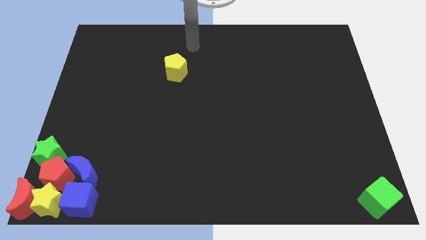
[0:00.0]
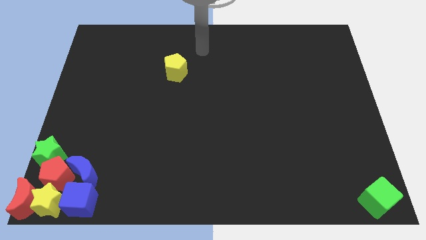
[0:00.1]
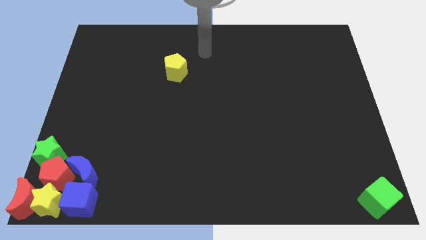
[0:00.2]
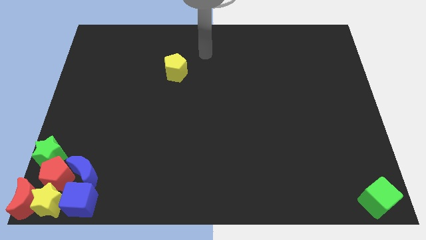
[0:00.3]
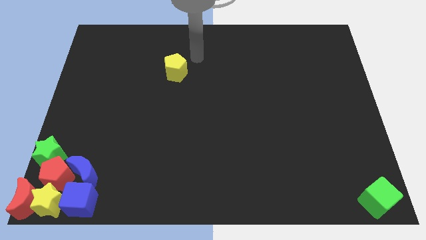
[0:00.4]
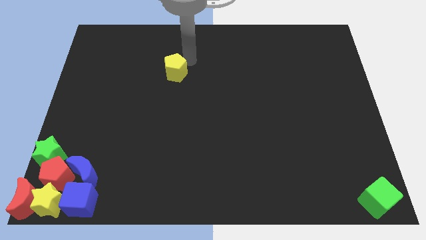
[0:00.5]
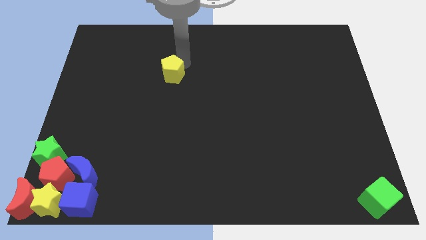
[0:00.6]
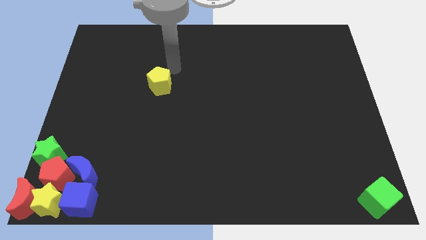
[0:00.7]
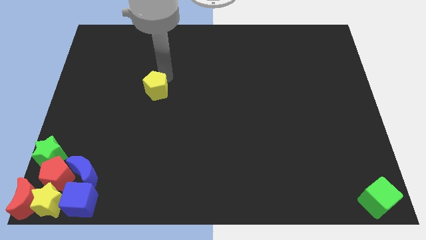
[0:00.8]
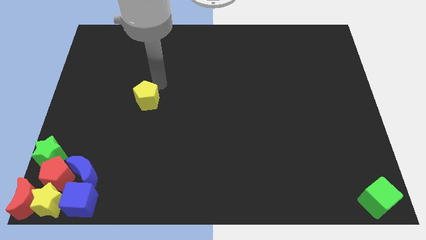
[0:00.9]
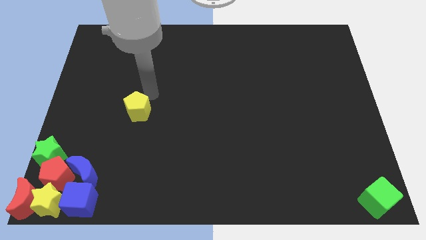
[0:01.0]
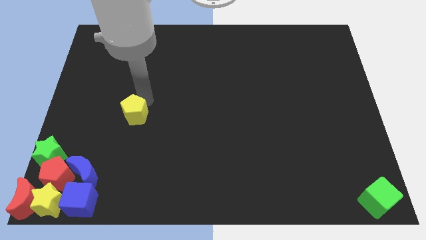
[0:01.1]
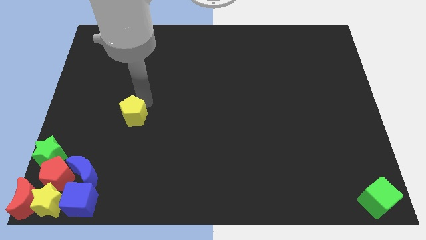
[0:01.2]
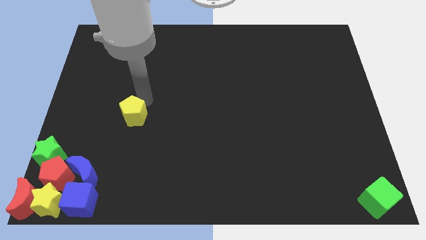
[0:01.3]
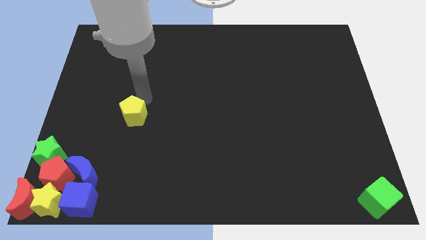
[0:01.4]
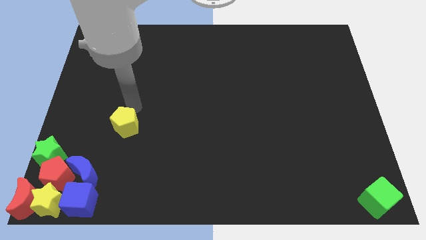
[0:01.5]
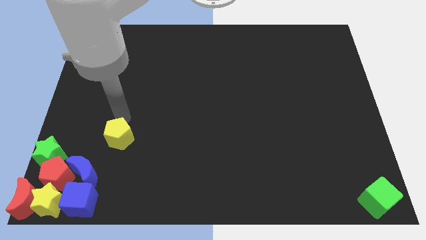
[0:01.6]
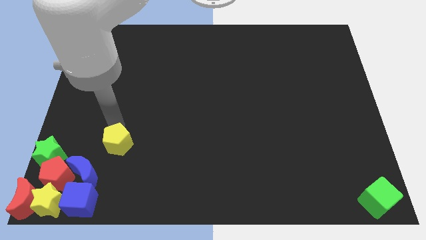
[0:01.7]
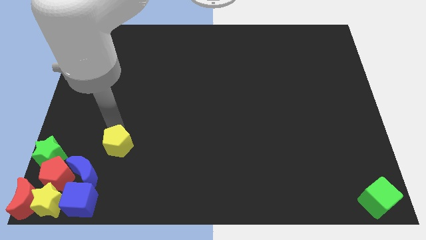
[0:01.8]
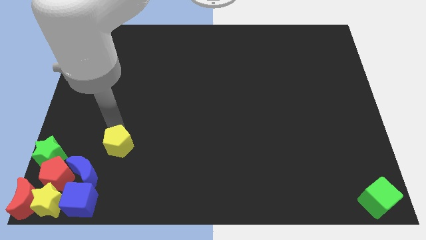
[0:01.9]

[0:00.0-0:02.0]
push the yellow pentagon towards the blue crescent

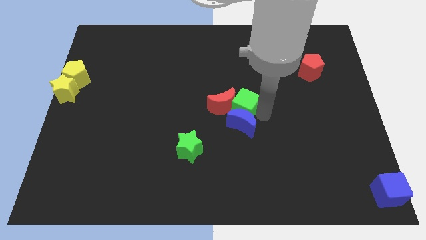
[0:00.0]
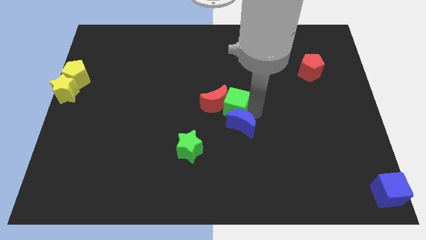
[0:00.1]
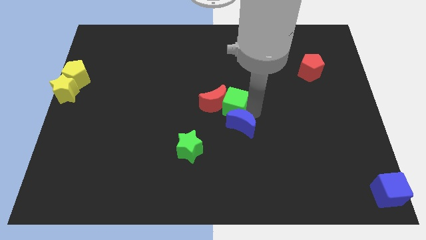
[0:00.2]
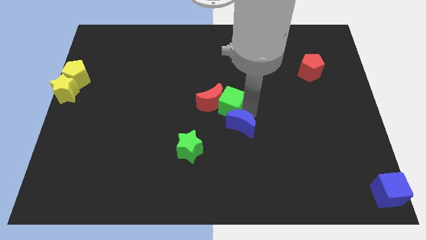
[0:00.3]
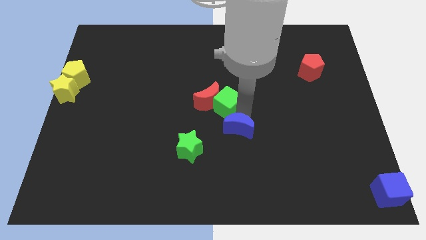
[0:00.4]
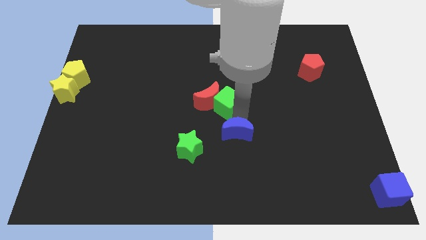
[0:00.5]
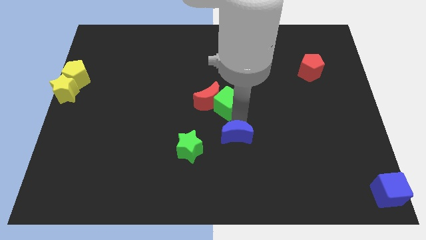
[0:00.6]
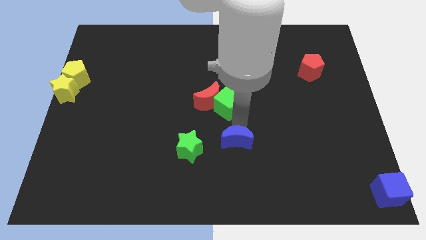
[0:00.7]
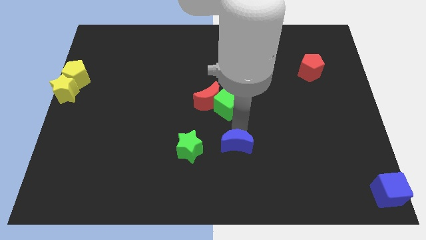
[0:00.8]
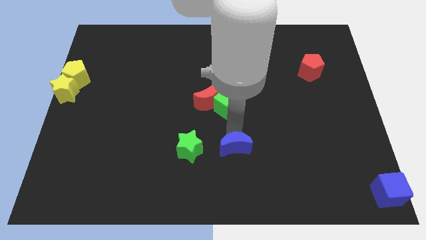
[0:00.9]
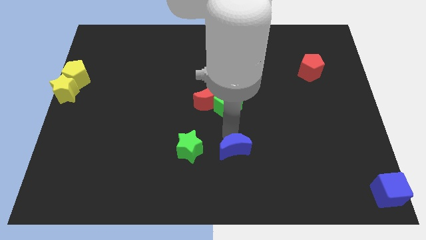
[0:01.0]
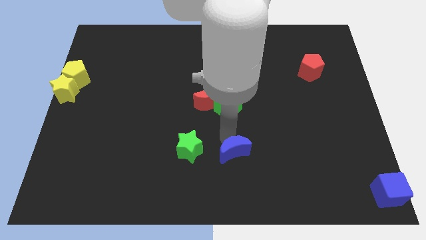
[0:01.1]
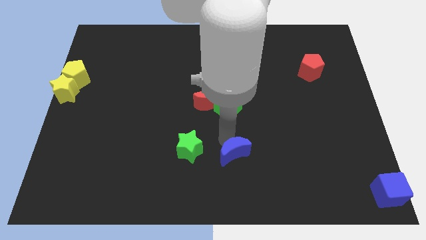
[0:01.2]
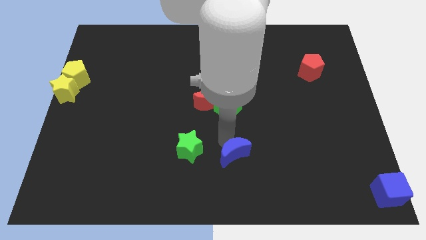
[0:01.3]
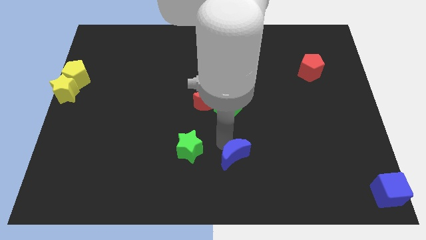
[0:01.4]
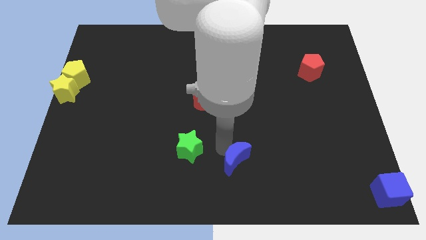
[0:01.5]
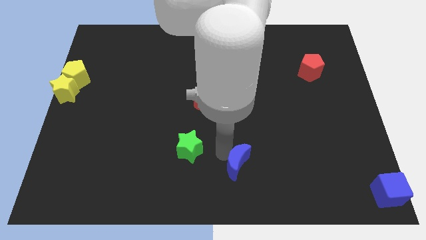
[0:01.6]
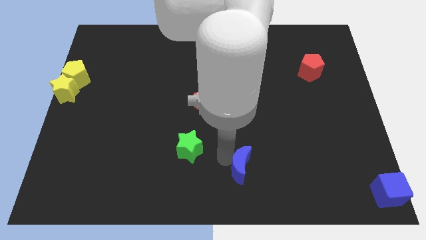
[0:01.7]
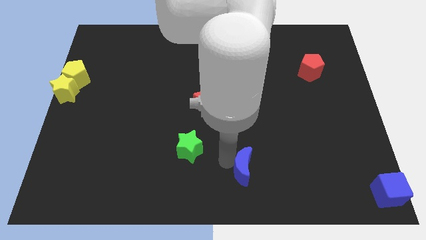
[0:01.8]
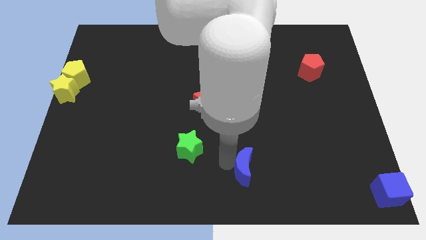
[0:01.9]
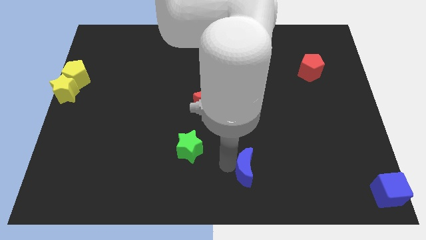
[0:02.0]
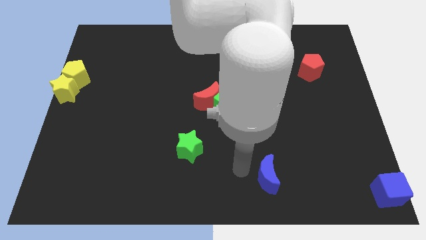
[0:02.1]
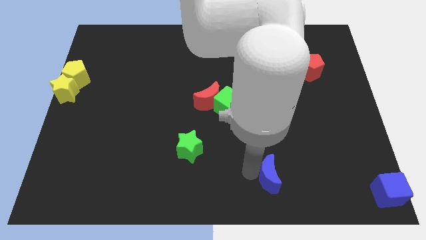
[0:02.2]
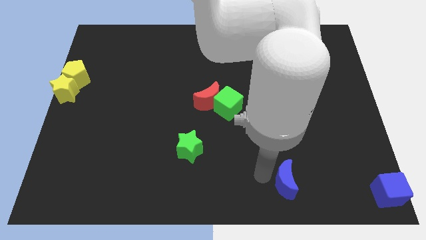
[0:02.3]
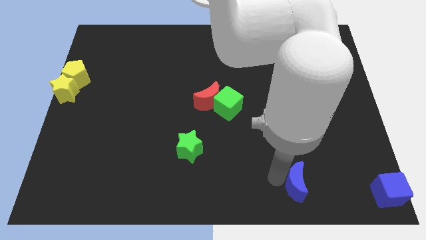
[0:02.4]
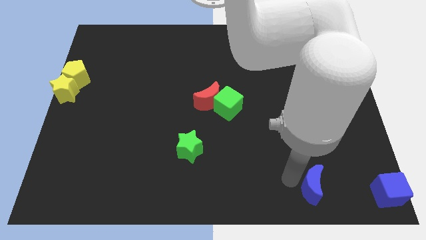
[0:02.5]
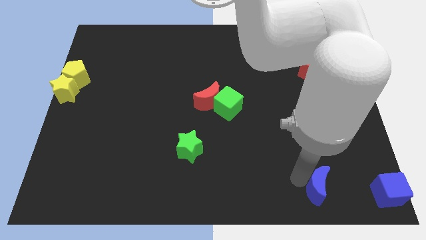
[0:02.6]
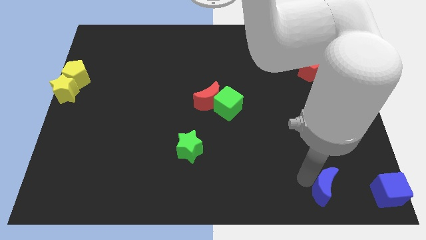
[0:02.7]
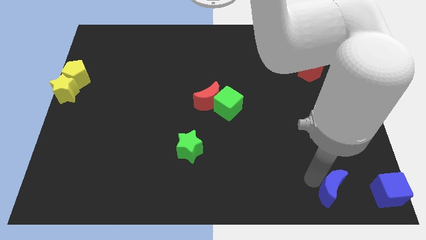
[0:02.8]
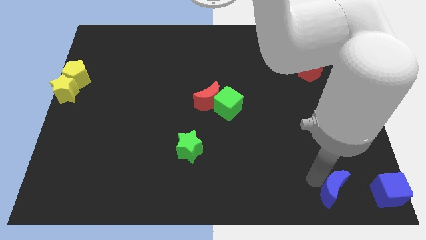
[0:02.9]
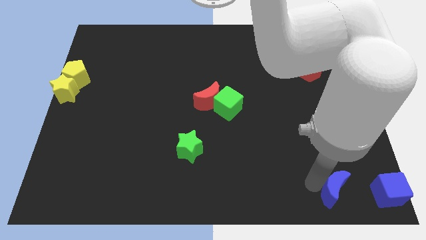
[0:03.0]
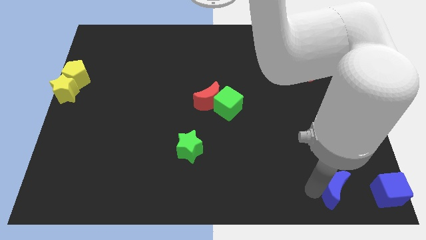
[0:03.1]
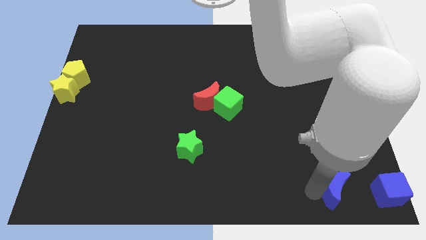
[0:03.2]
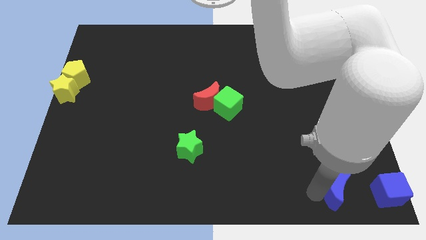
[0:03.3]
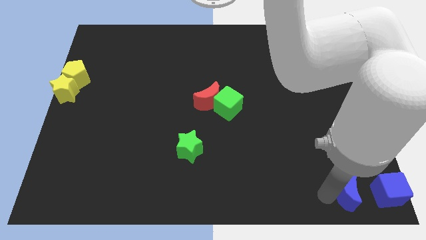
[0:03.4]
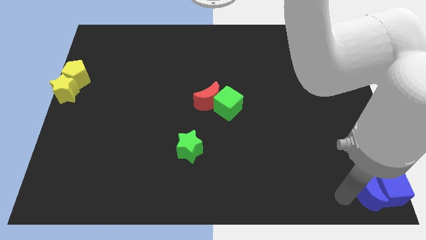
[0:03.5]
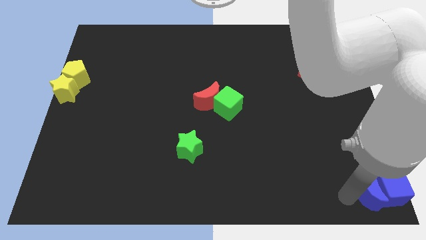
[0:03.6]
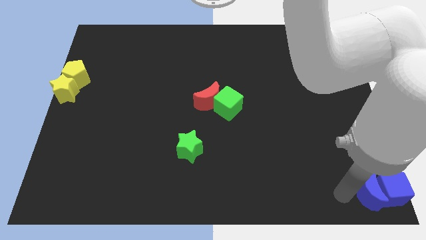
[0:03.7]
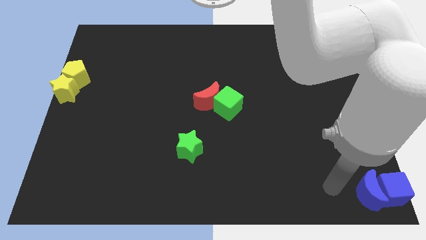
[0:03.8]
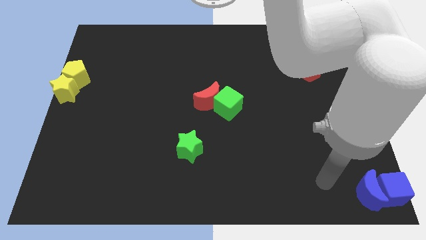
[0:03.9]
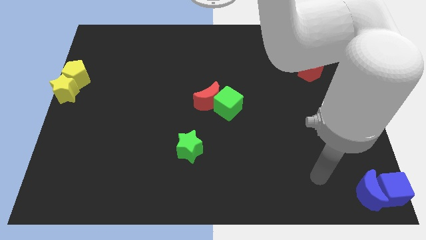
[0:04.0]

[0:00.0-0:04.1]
slide the blue crescent in to blue cube

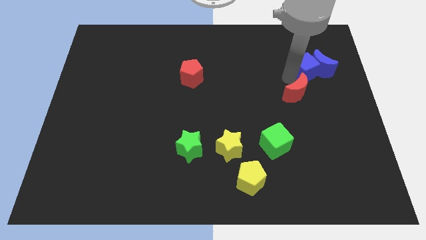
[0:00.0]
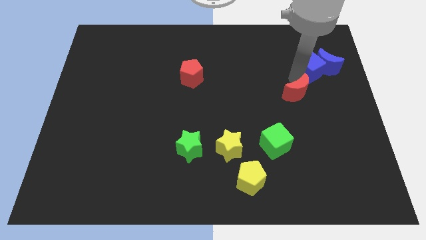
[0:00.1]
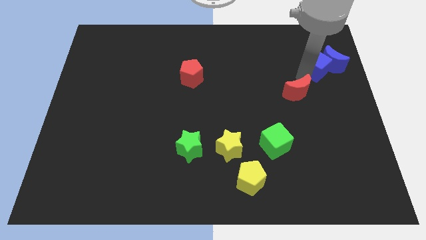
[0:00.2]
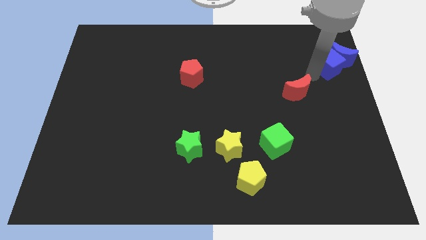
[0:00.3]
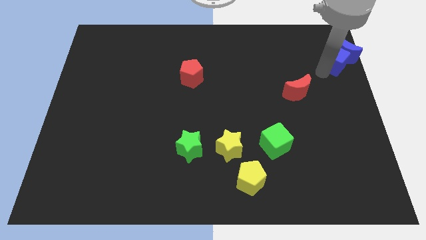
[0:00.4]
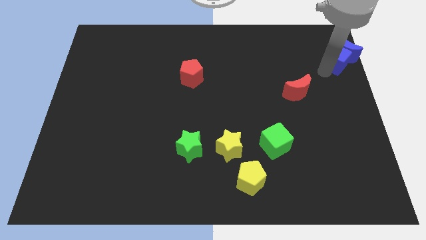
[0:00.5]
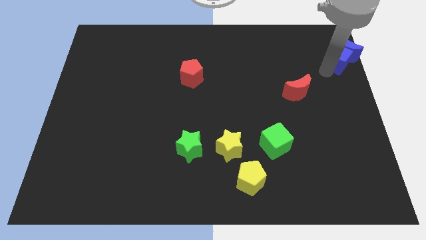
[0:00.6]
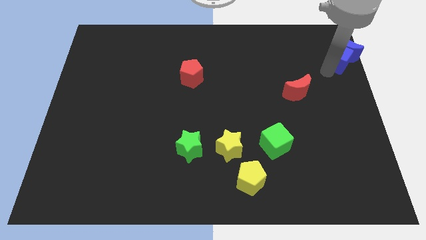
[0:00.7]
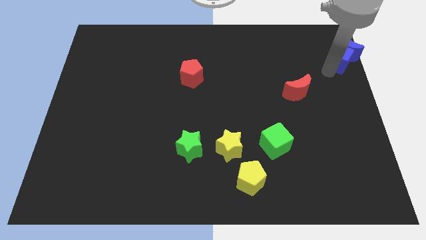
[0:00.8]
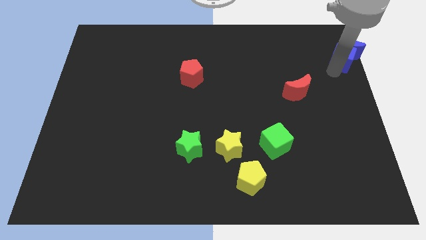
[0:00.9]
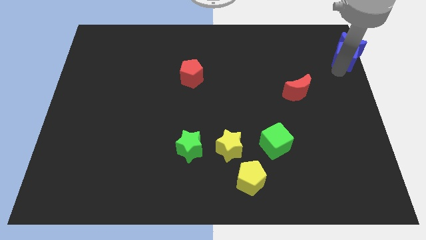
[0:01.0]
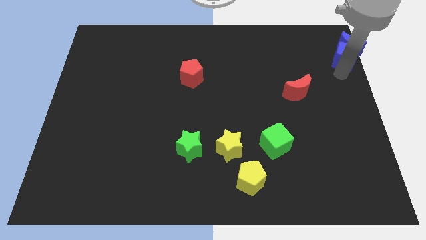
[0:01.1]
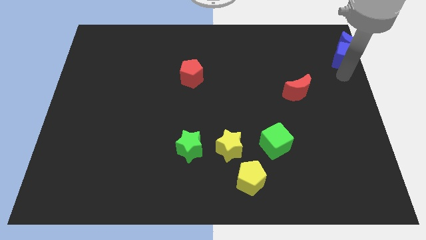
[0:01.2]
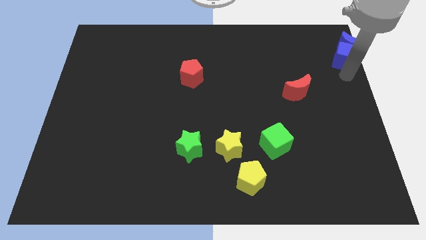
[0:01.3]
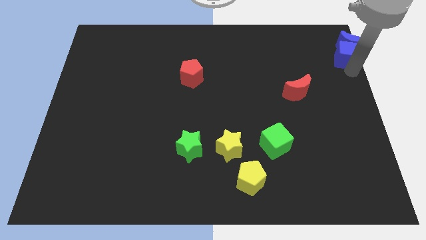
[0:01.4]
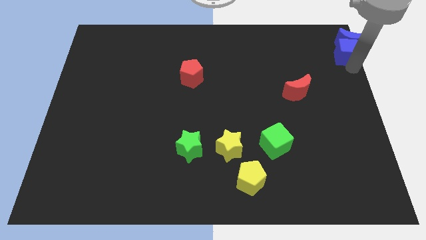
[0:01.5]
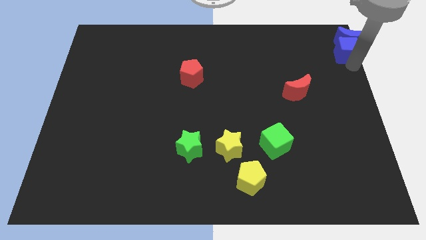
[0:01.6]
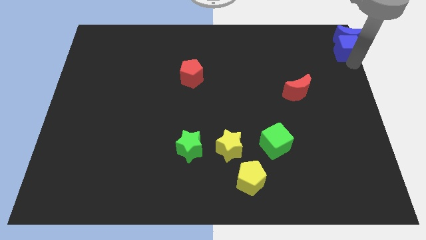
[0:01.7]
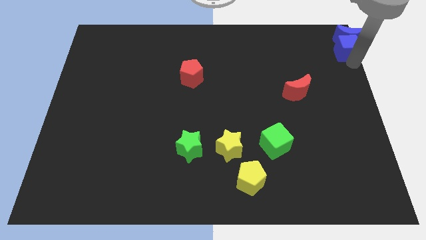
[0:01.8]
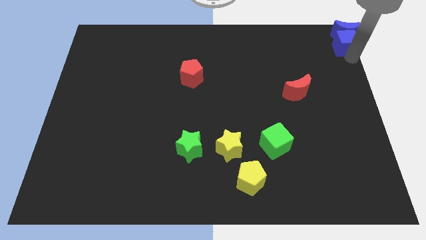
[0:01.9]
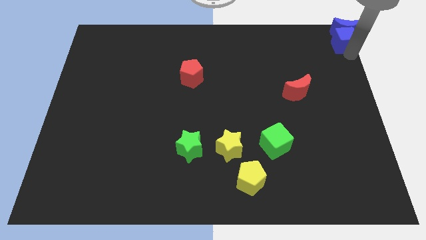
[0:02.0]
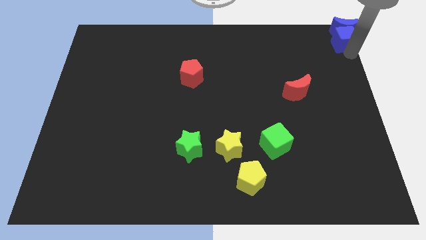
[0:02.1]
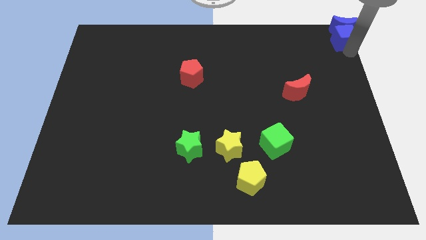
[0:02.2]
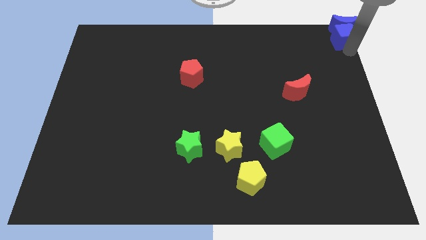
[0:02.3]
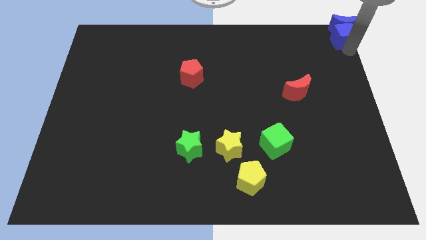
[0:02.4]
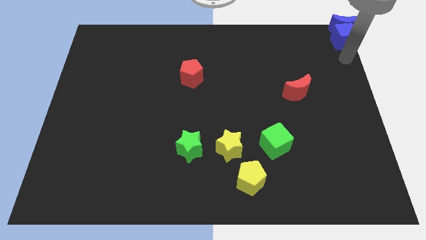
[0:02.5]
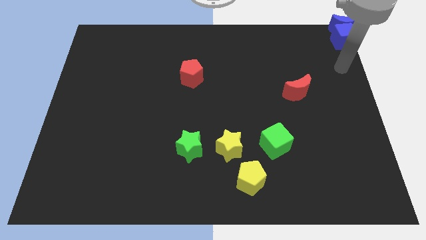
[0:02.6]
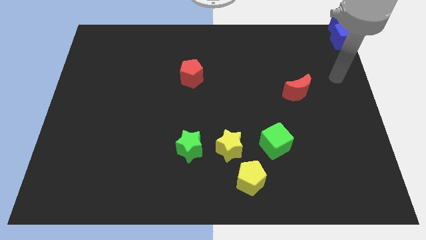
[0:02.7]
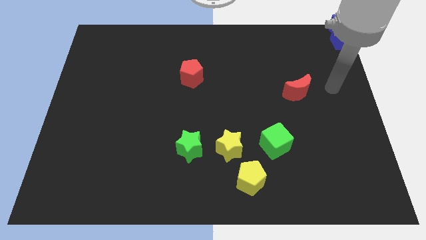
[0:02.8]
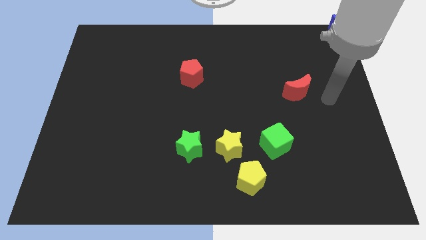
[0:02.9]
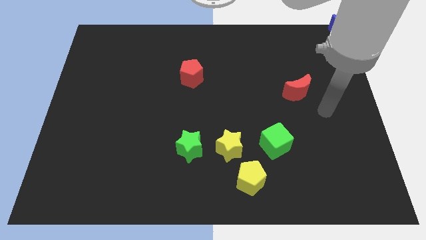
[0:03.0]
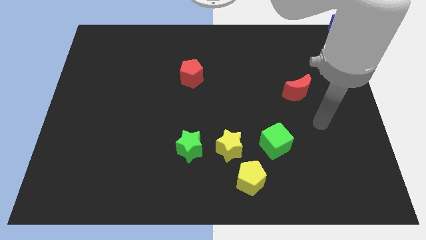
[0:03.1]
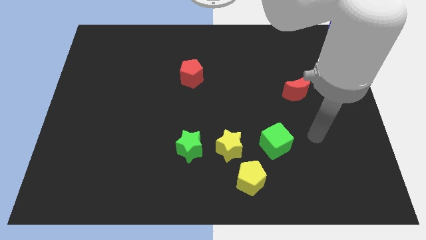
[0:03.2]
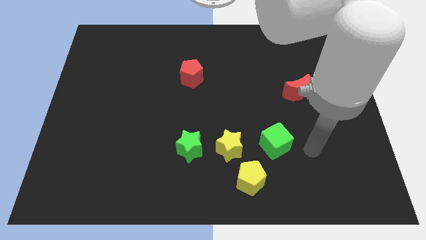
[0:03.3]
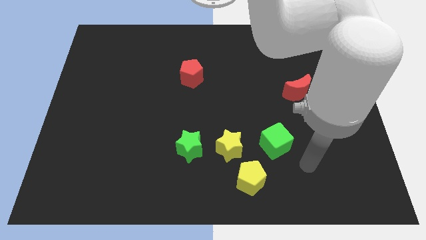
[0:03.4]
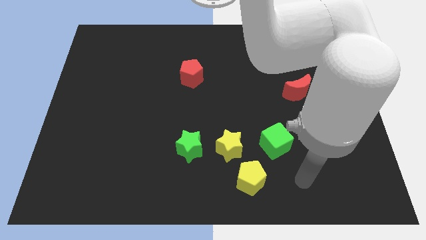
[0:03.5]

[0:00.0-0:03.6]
place the blue blocks at the top right corner of the board
